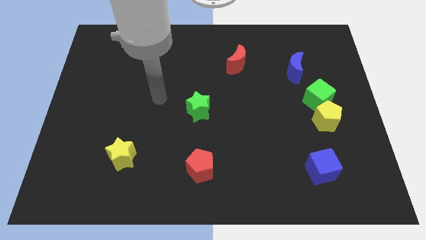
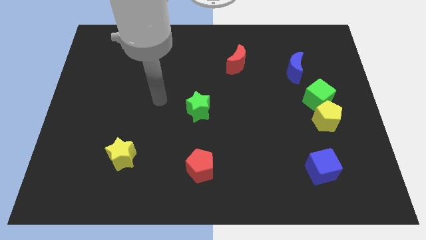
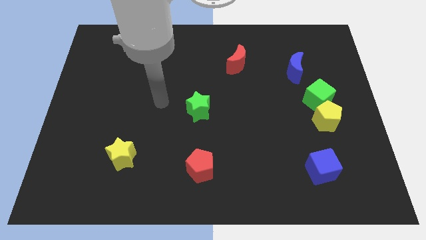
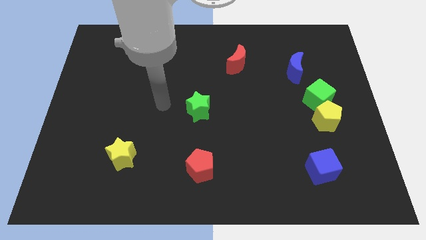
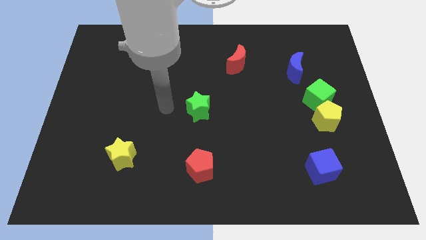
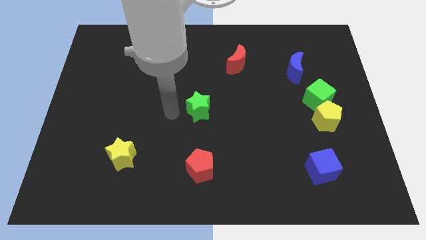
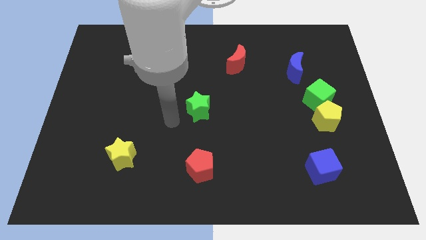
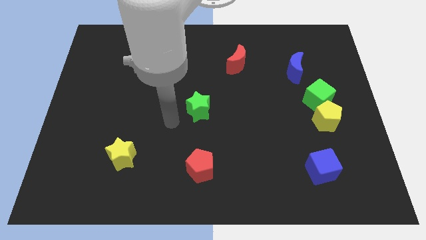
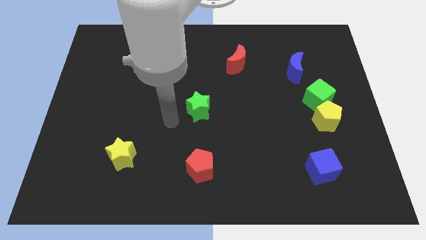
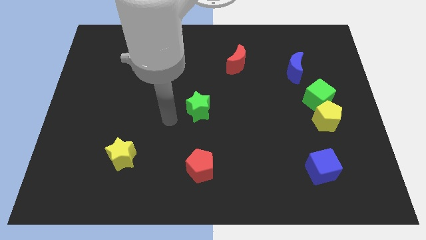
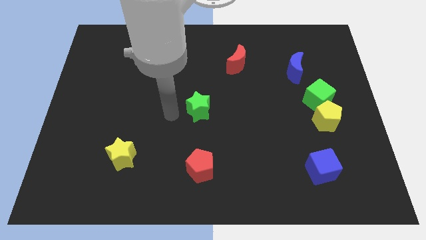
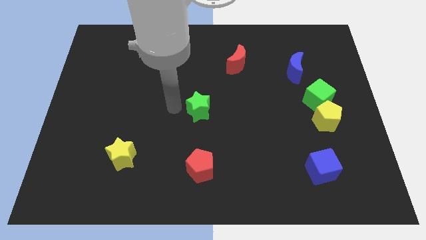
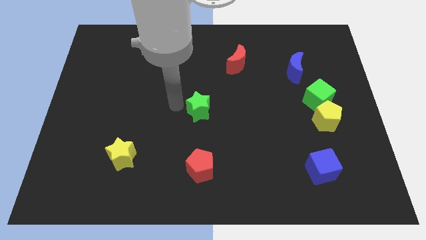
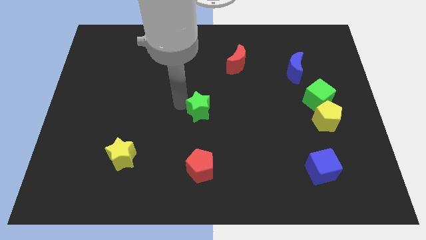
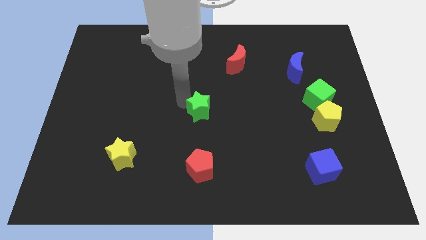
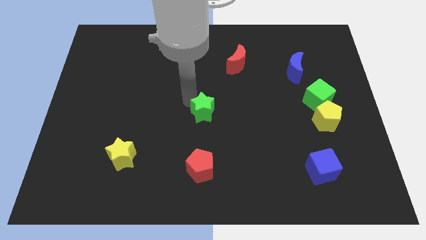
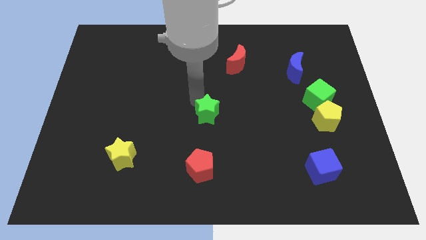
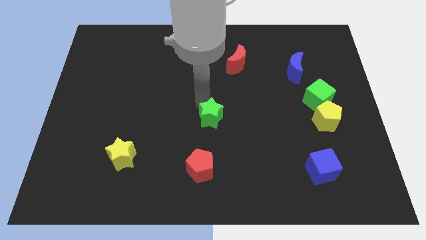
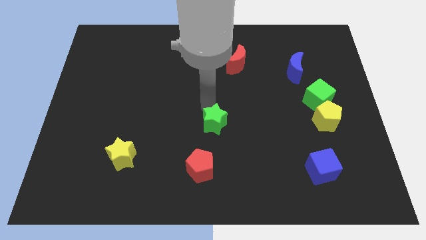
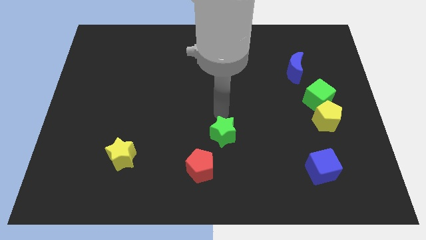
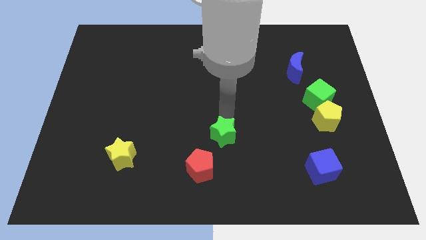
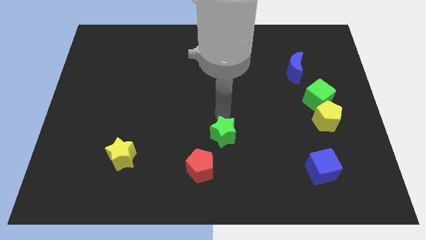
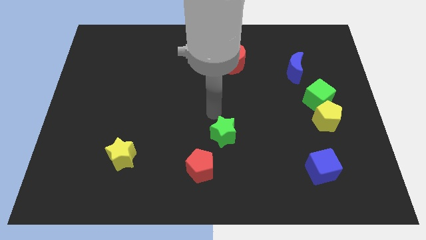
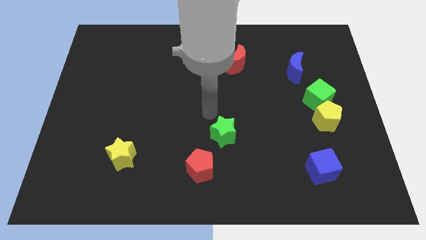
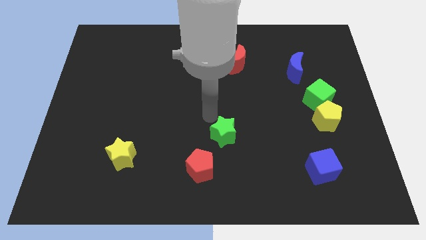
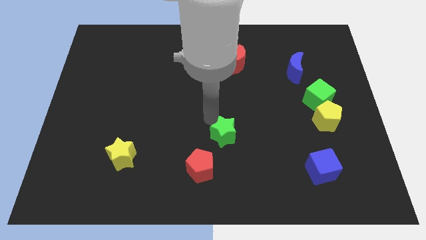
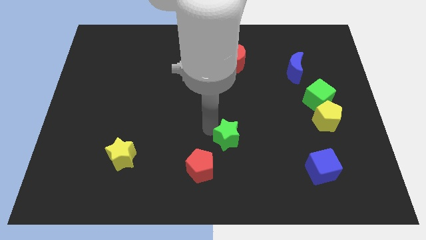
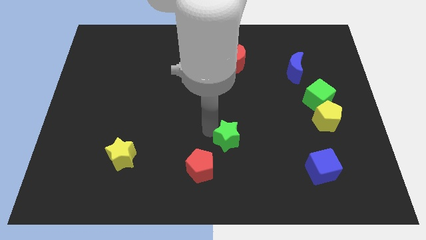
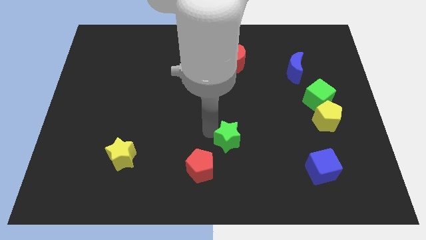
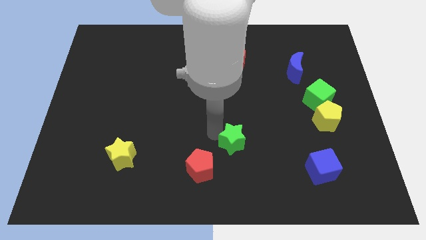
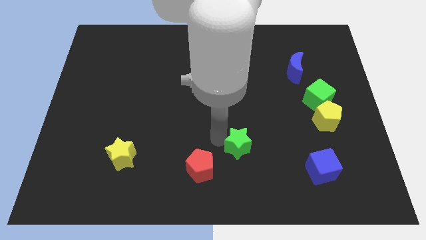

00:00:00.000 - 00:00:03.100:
move green star away from the center

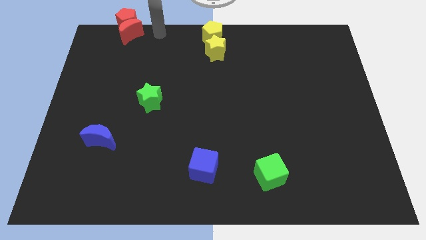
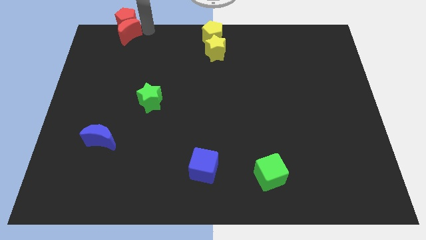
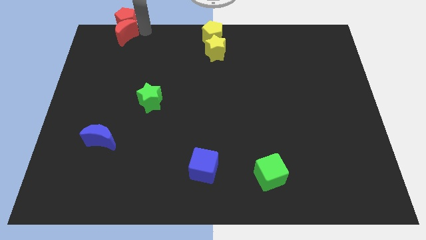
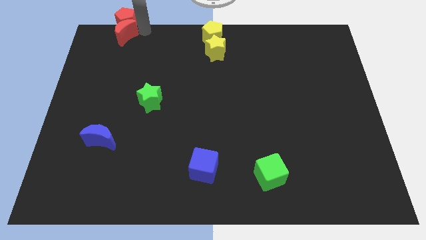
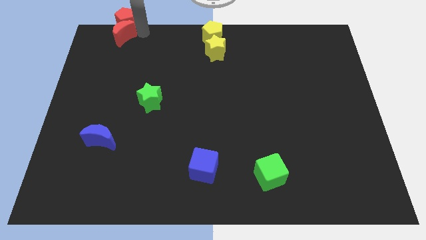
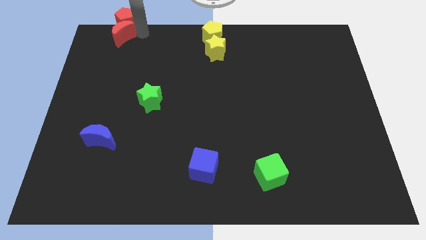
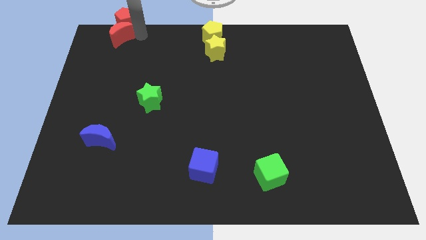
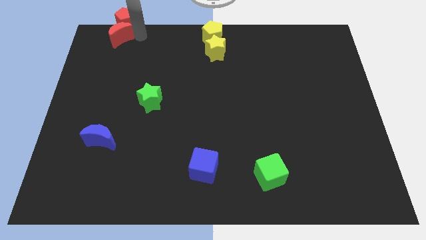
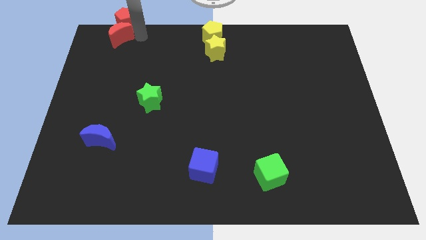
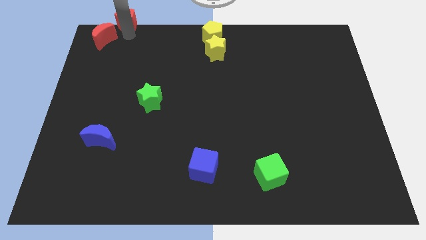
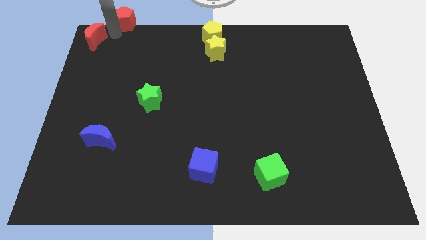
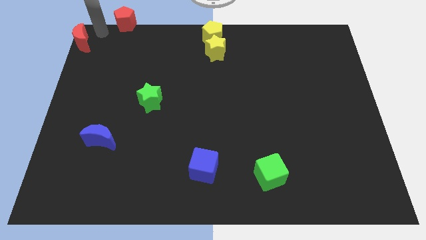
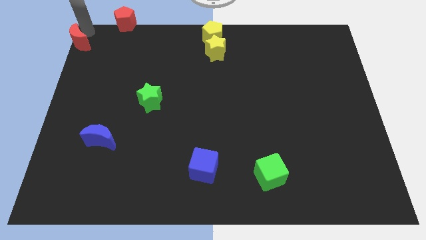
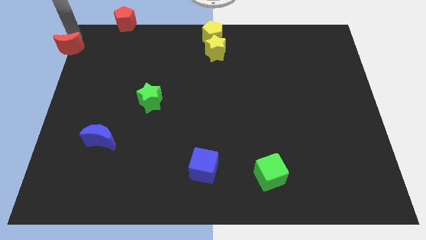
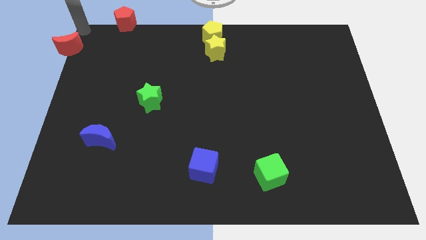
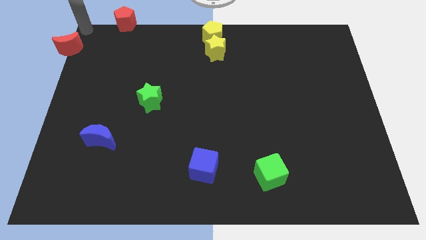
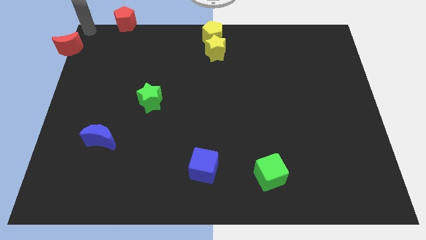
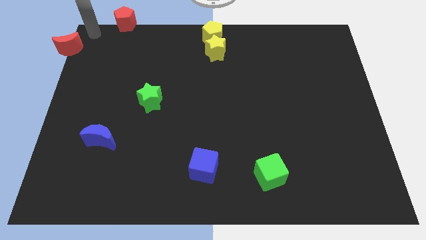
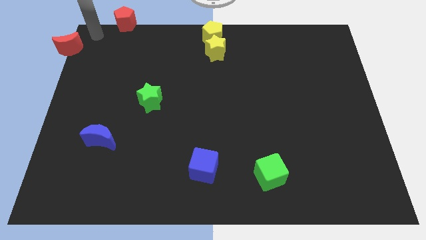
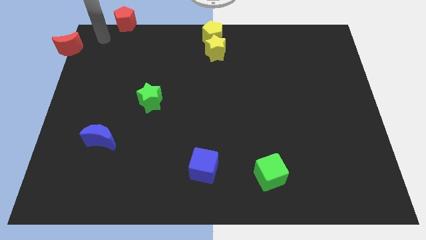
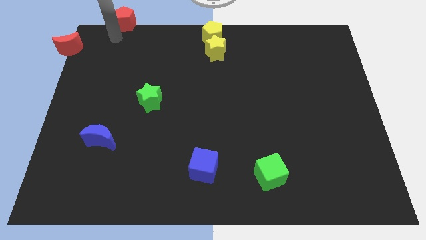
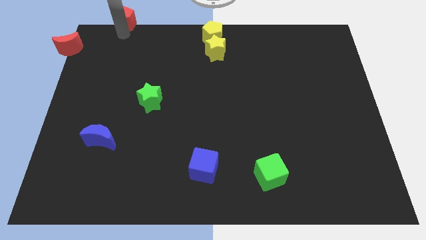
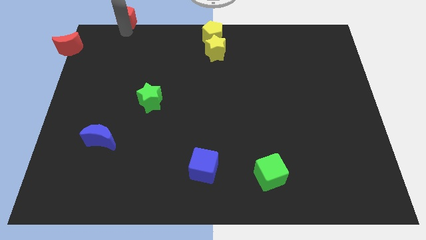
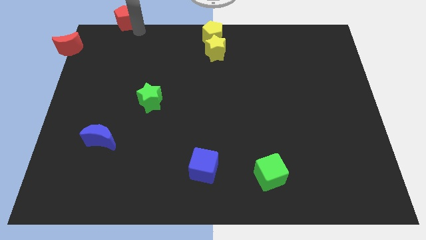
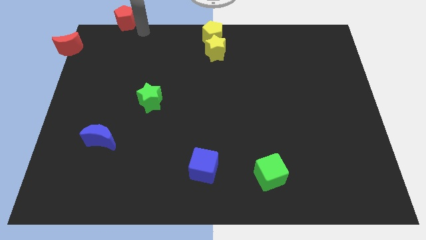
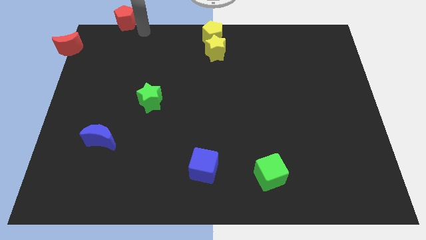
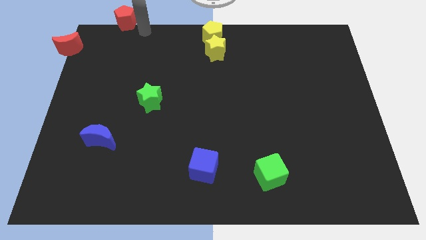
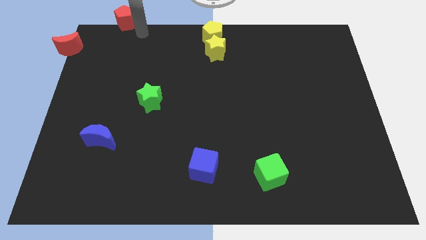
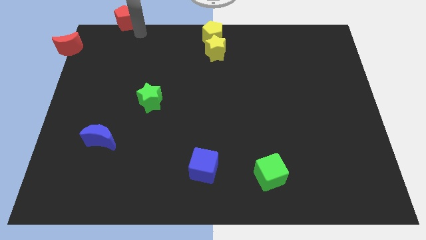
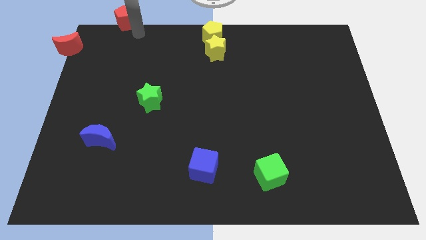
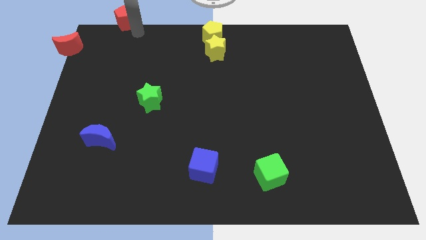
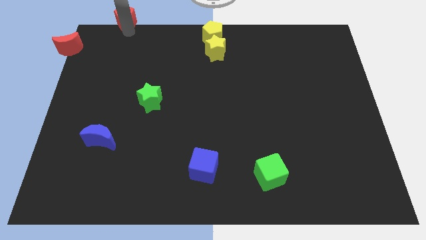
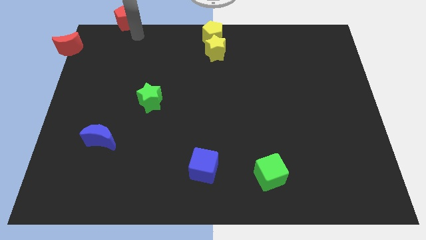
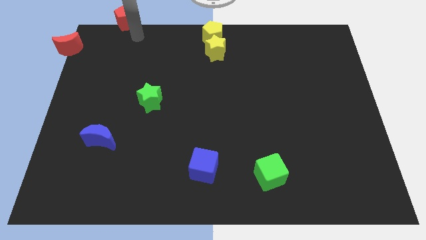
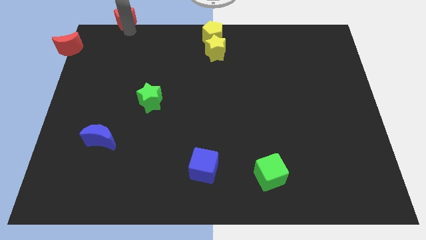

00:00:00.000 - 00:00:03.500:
move the red crescent to the left side of the board

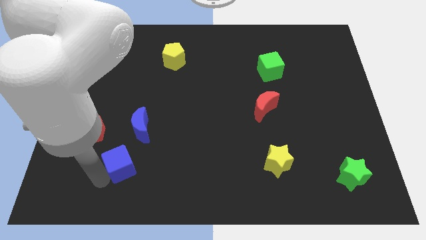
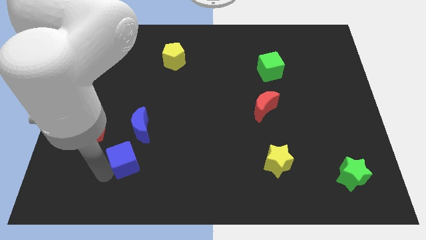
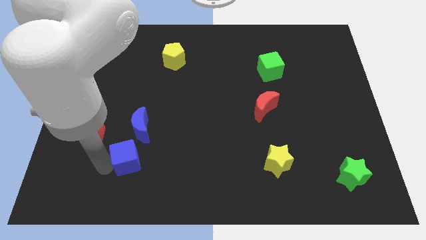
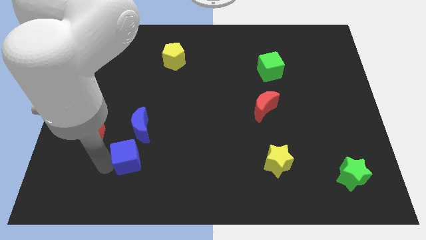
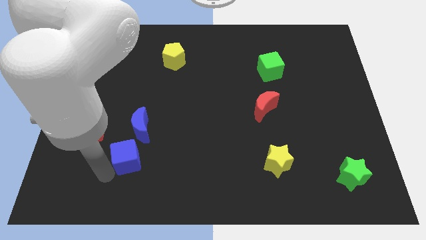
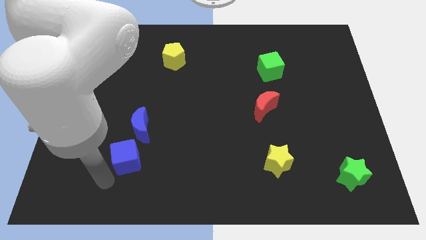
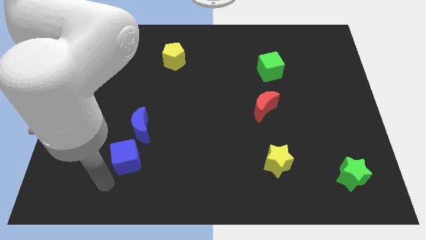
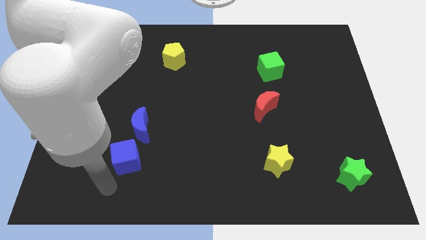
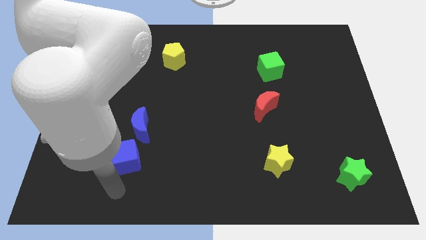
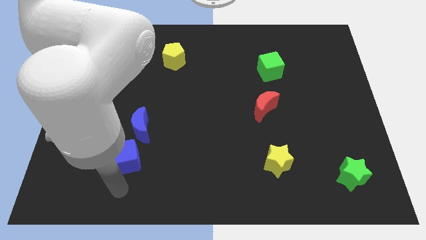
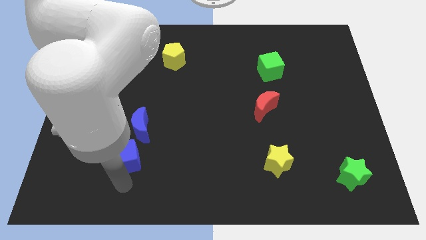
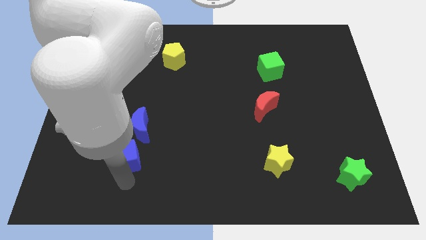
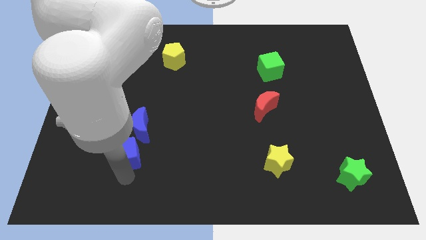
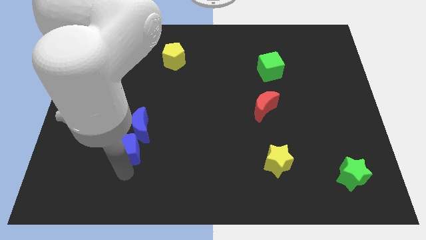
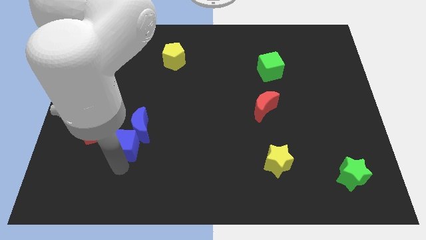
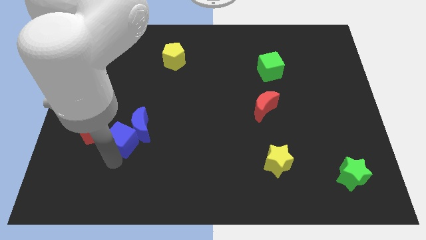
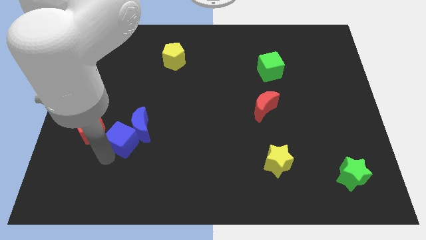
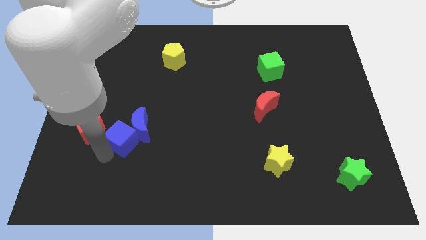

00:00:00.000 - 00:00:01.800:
push the blue cube into the blue crescent

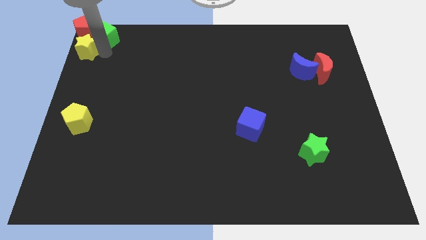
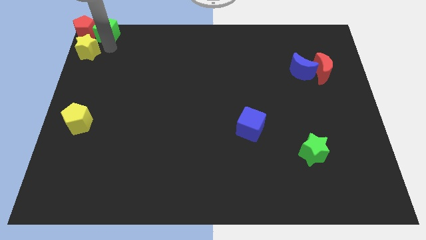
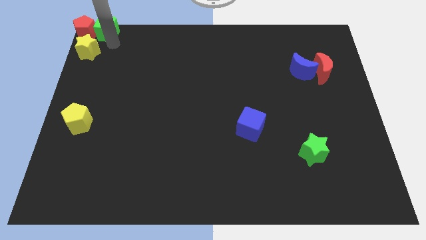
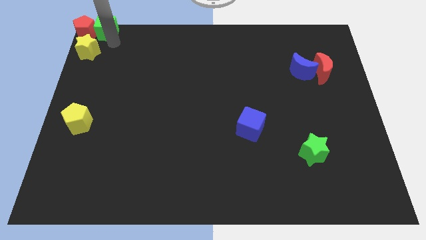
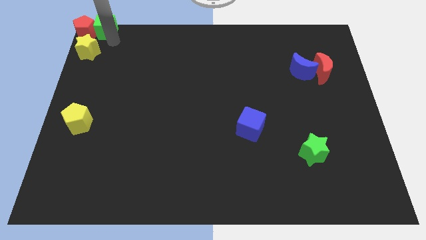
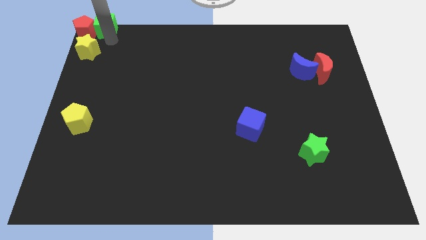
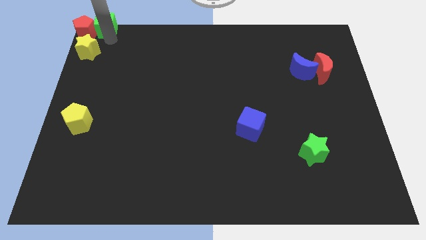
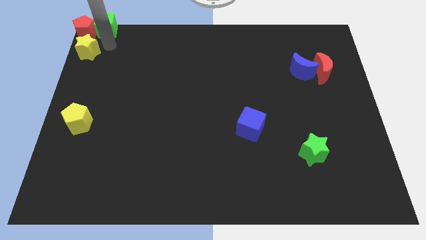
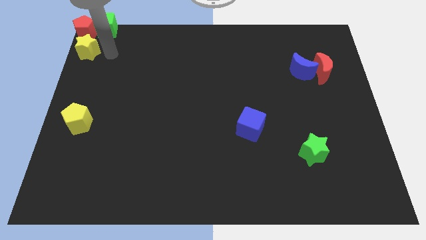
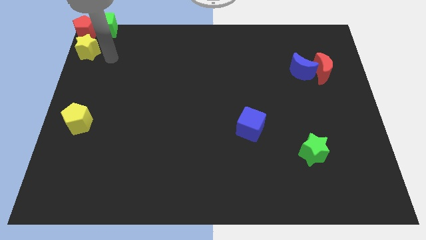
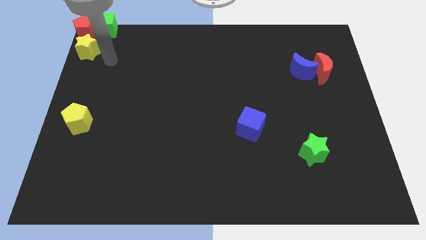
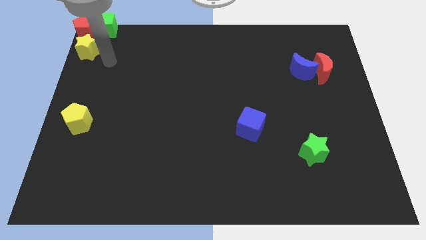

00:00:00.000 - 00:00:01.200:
move the green cube to the right side of the red pentagon on the board
